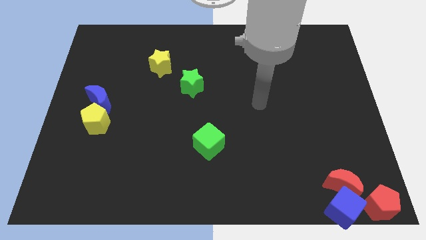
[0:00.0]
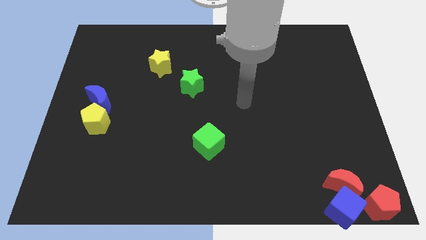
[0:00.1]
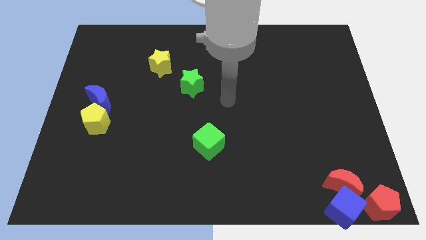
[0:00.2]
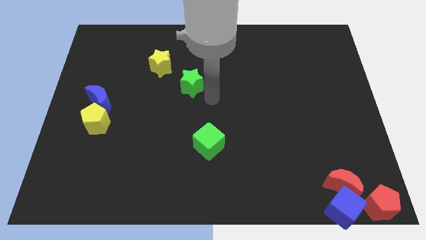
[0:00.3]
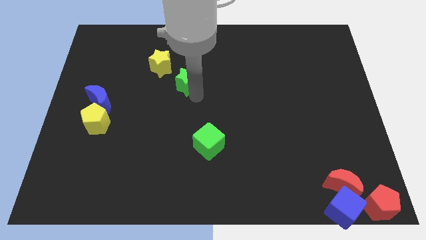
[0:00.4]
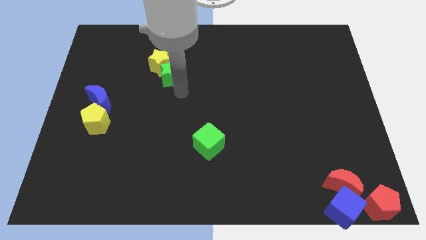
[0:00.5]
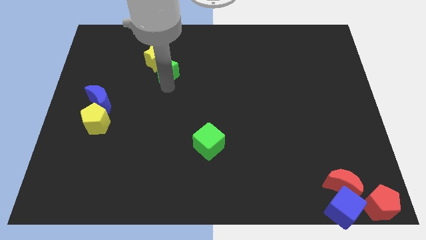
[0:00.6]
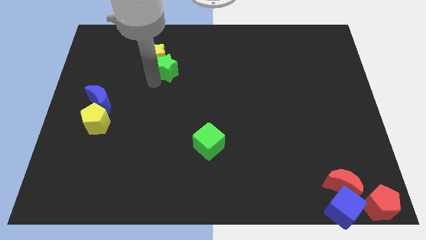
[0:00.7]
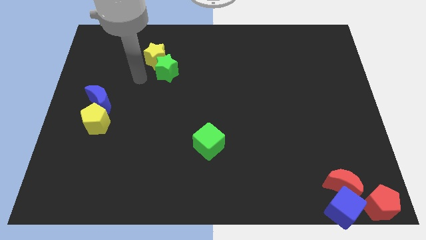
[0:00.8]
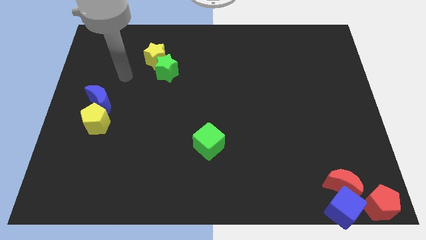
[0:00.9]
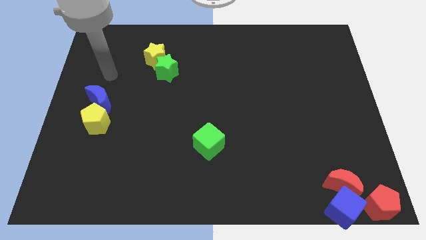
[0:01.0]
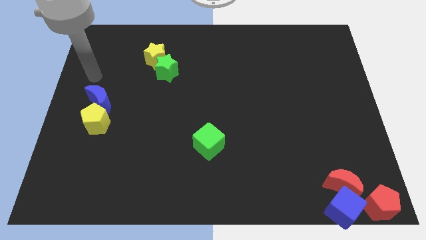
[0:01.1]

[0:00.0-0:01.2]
place the green star at the bottom right of the yellow star

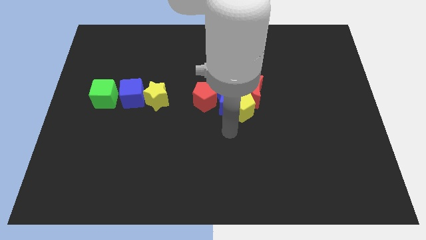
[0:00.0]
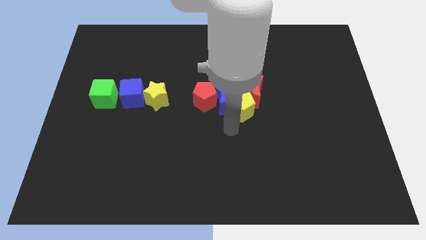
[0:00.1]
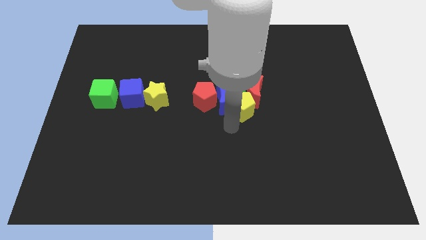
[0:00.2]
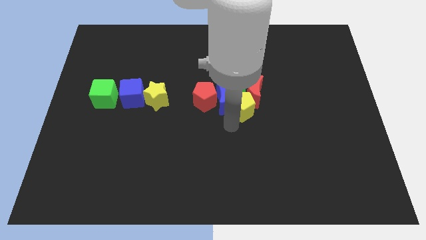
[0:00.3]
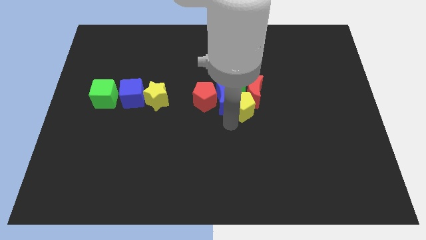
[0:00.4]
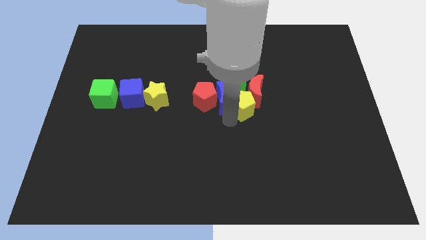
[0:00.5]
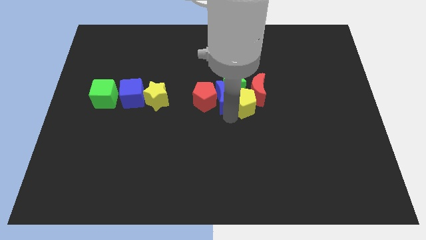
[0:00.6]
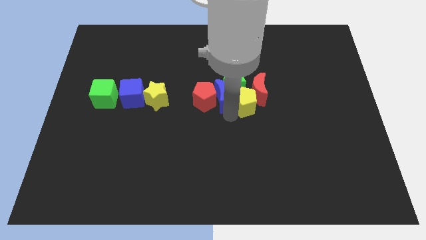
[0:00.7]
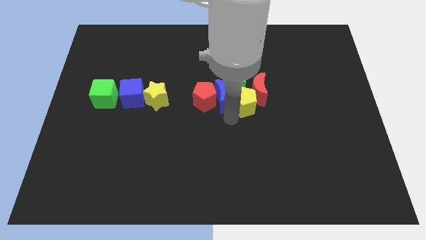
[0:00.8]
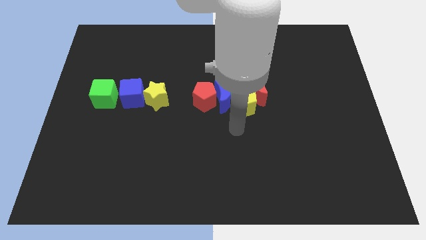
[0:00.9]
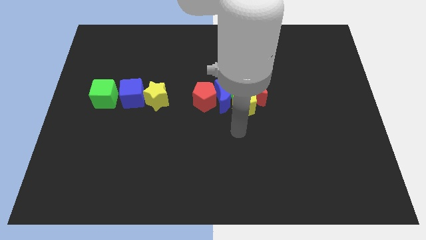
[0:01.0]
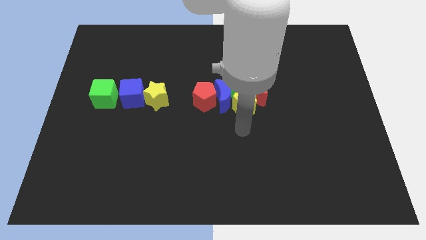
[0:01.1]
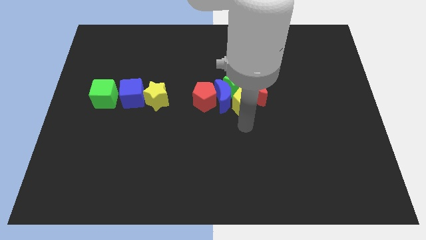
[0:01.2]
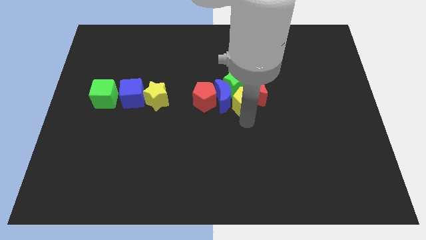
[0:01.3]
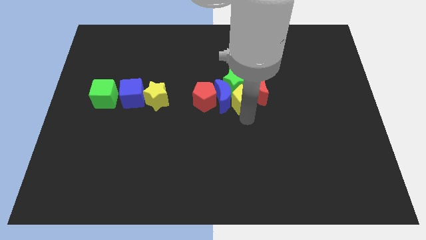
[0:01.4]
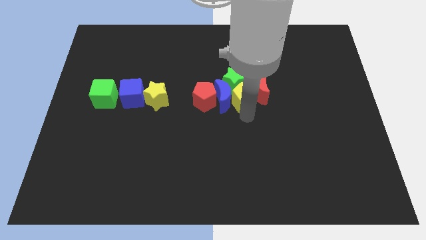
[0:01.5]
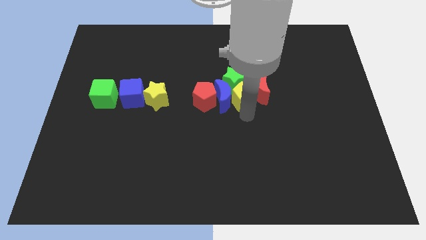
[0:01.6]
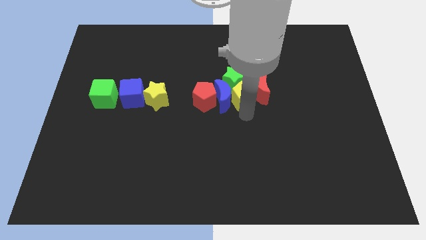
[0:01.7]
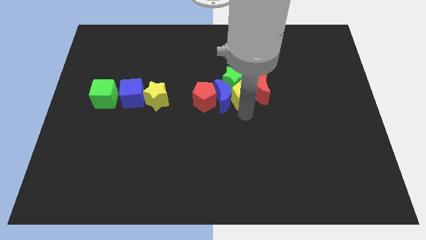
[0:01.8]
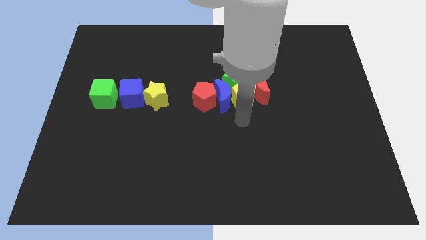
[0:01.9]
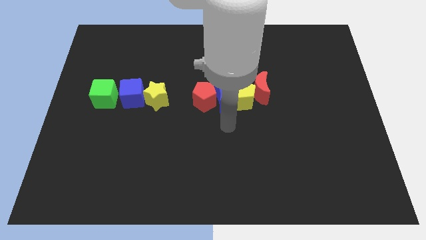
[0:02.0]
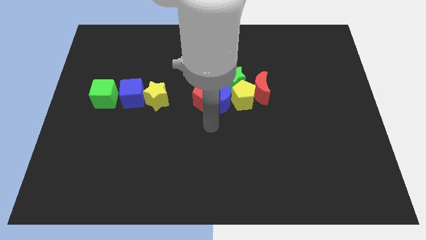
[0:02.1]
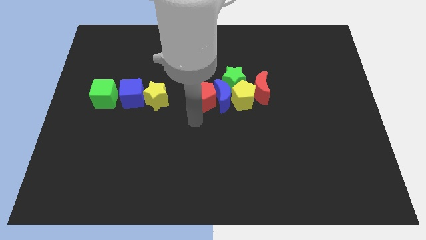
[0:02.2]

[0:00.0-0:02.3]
push yellow pentagon slightly upward

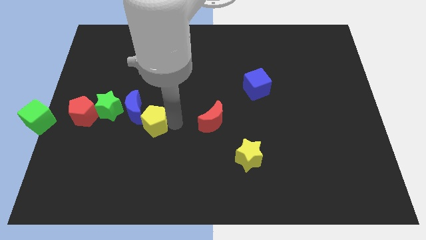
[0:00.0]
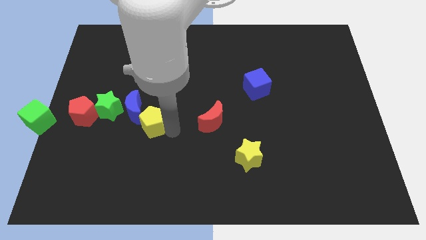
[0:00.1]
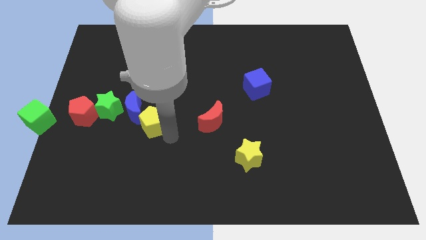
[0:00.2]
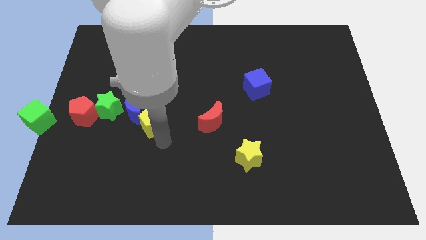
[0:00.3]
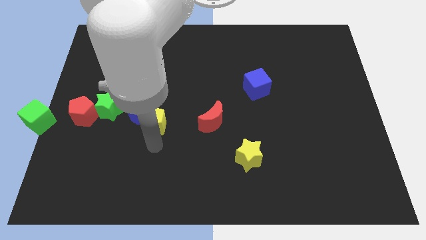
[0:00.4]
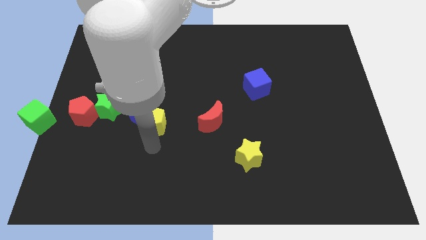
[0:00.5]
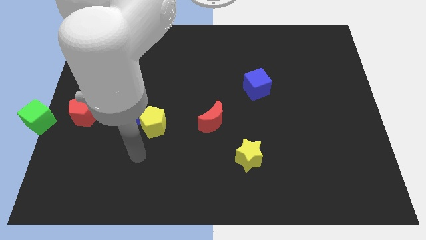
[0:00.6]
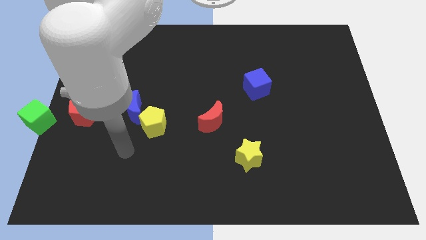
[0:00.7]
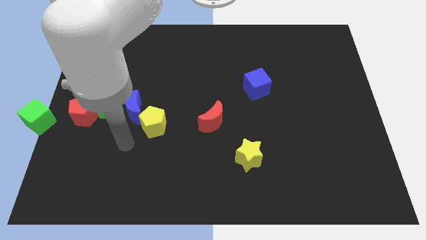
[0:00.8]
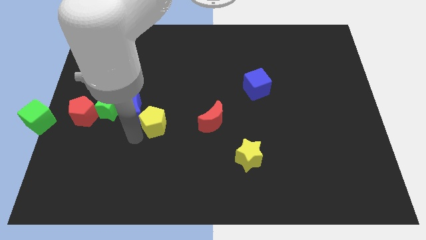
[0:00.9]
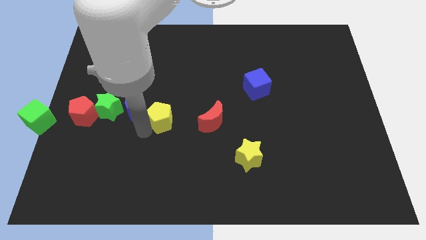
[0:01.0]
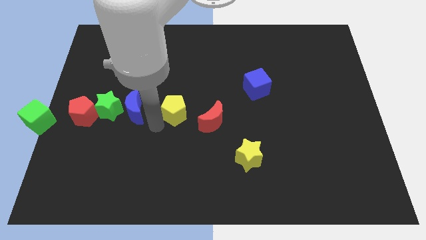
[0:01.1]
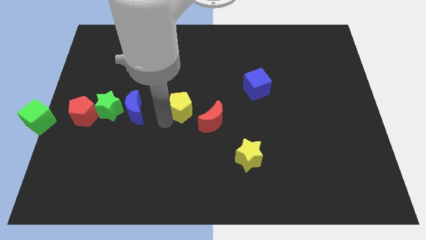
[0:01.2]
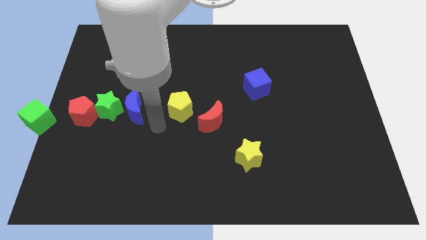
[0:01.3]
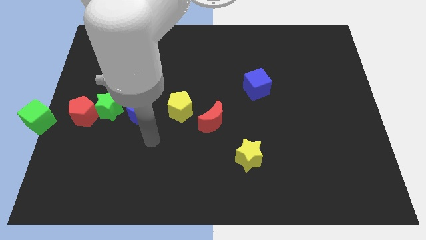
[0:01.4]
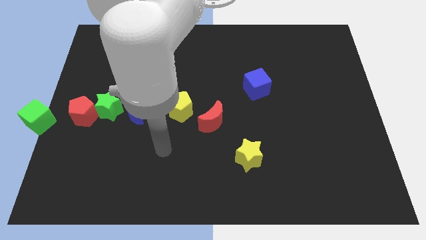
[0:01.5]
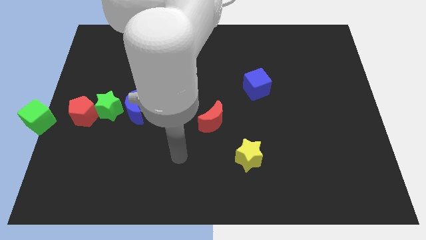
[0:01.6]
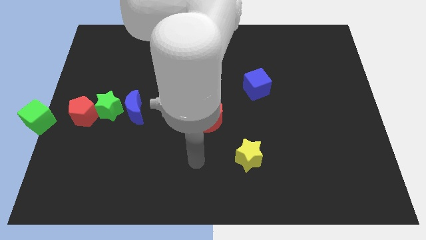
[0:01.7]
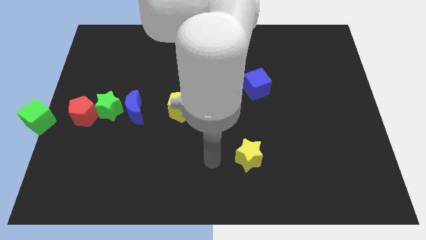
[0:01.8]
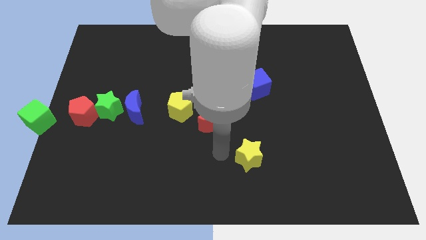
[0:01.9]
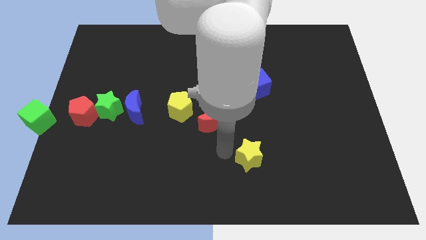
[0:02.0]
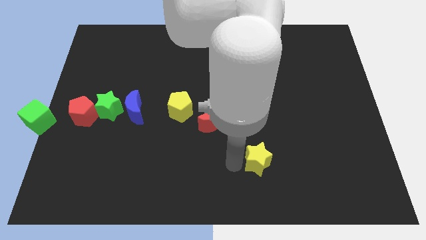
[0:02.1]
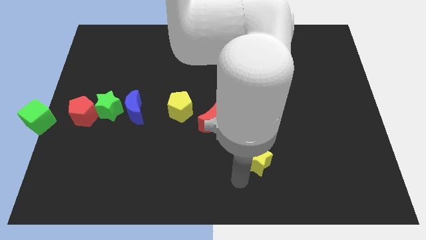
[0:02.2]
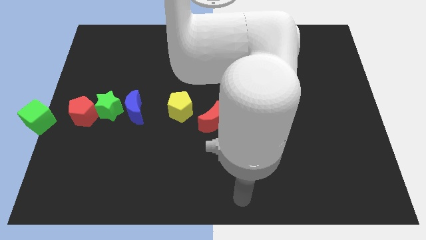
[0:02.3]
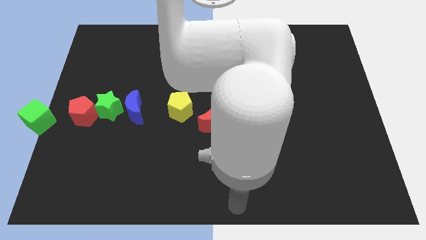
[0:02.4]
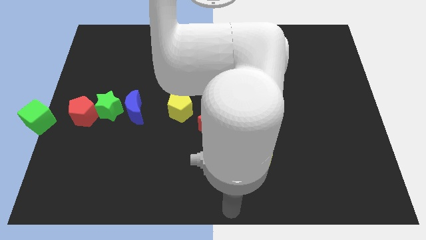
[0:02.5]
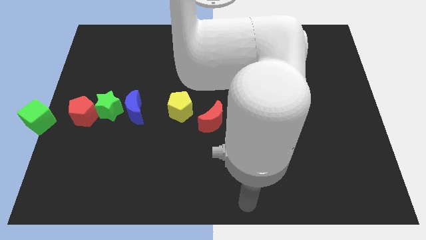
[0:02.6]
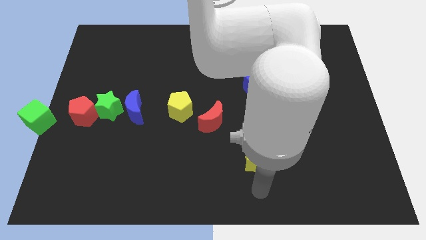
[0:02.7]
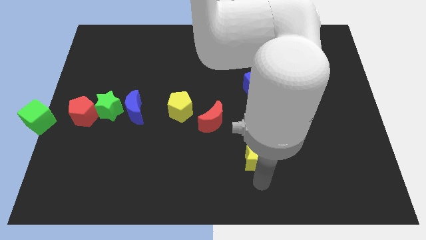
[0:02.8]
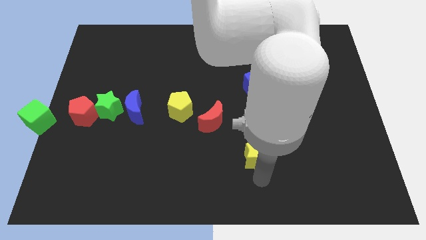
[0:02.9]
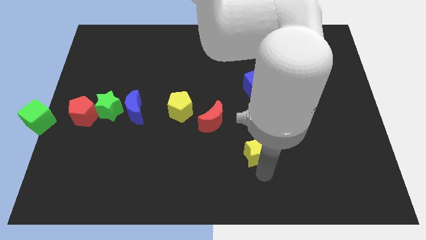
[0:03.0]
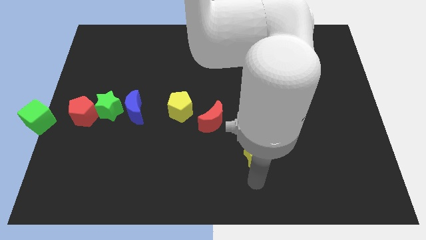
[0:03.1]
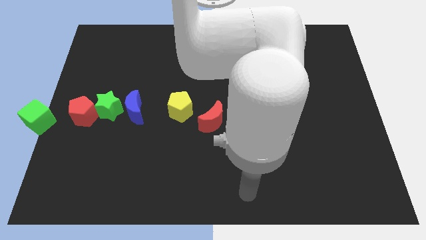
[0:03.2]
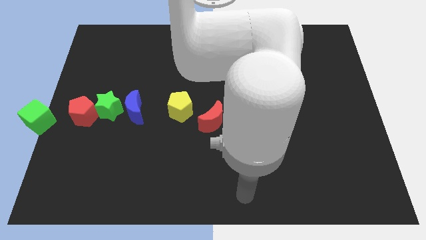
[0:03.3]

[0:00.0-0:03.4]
slightly move the yellow pentagon to the center of the board

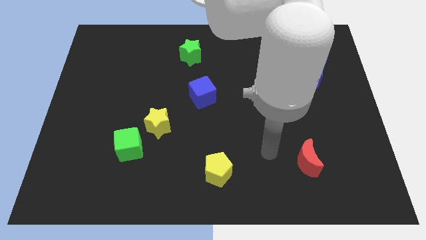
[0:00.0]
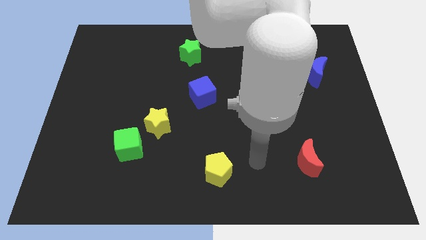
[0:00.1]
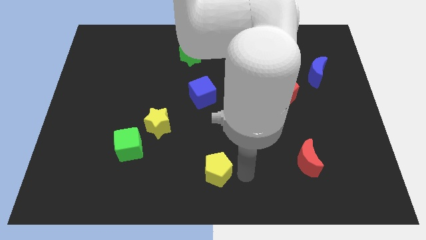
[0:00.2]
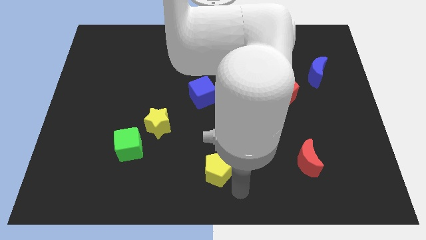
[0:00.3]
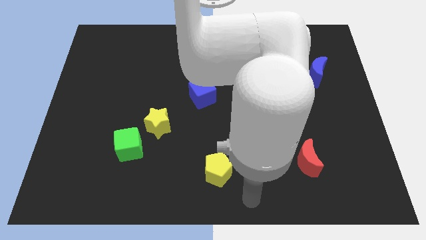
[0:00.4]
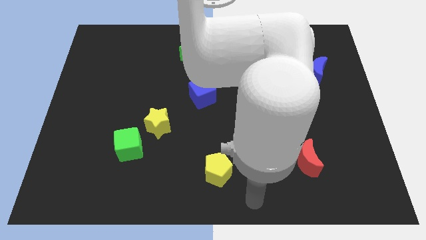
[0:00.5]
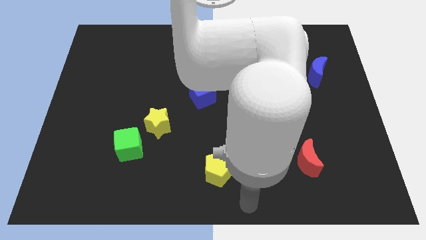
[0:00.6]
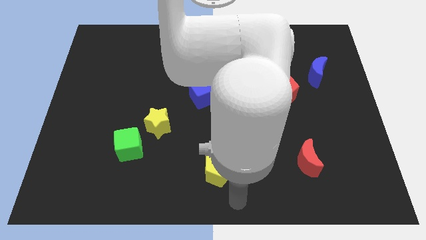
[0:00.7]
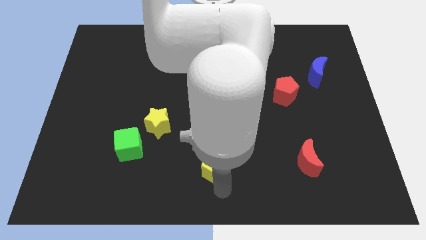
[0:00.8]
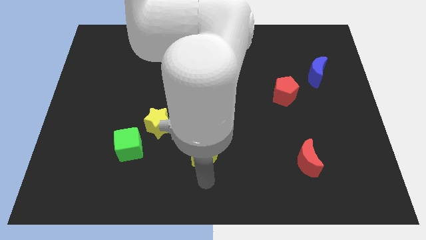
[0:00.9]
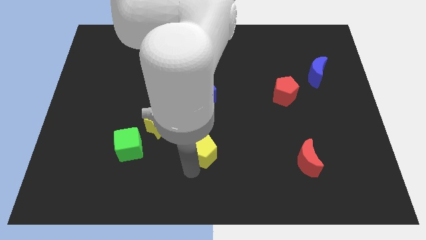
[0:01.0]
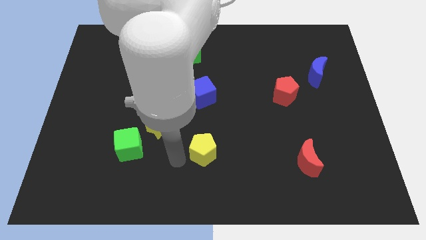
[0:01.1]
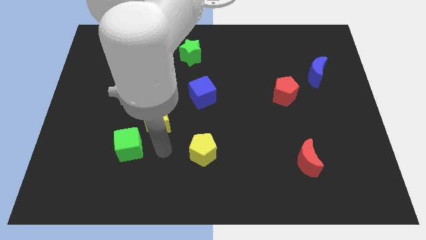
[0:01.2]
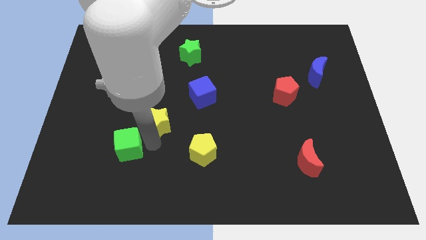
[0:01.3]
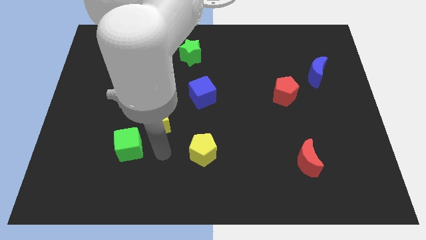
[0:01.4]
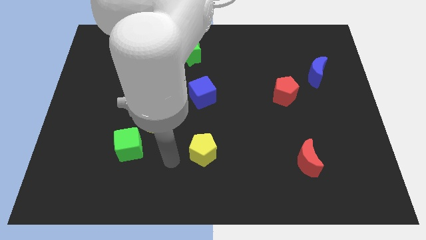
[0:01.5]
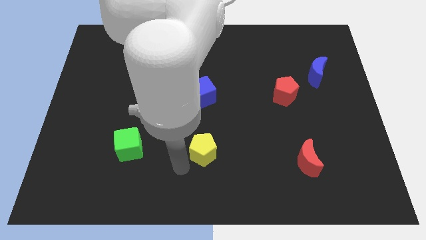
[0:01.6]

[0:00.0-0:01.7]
slightly push the yellow pentagon towards the left side of the board

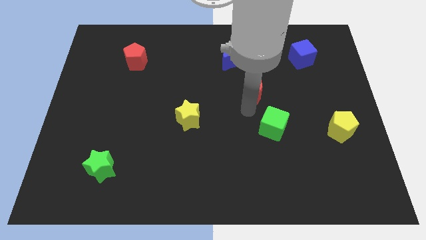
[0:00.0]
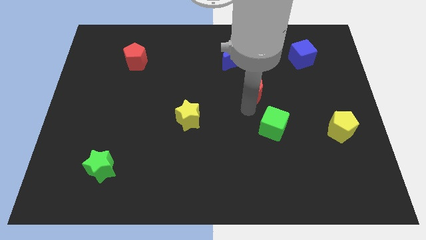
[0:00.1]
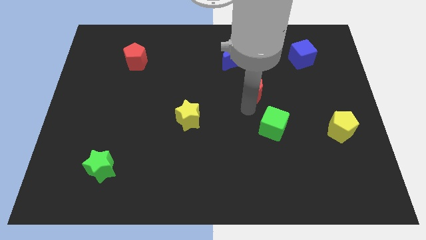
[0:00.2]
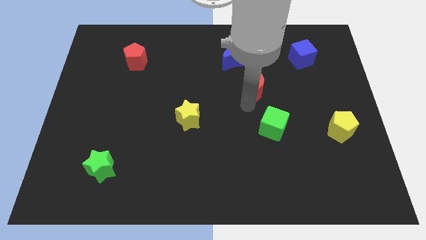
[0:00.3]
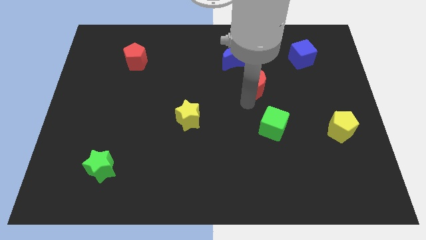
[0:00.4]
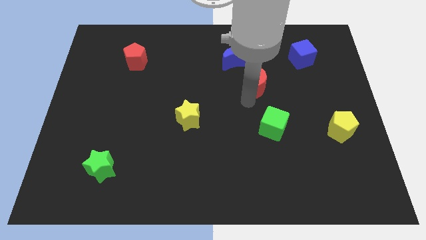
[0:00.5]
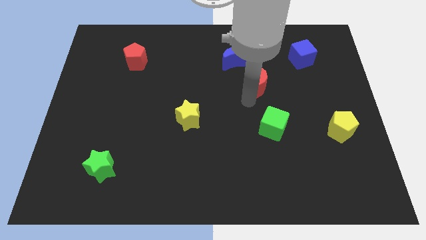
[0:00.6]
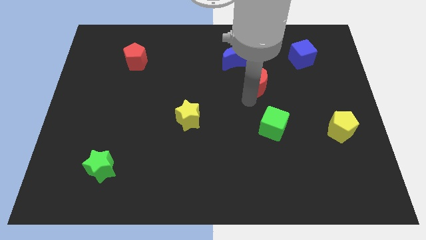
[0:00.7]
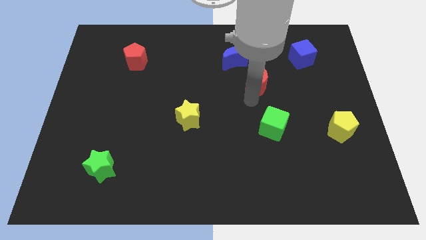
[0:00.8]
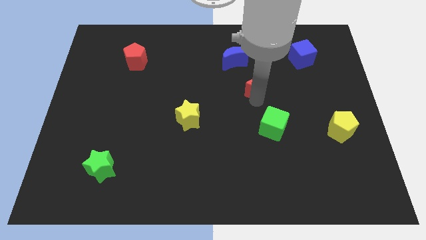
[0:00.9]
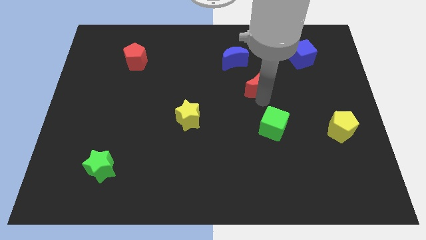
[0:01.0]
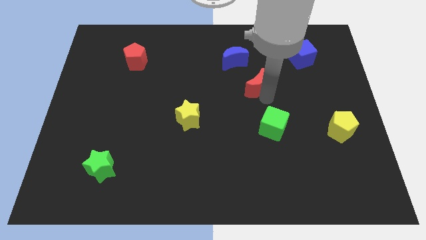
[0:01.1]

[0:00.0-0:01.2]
push the red moon in between the green cube and blue moon
